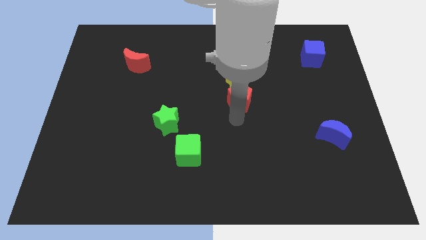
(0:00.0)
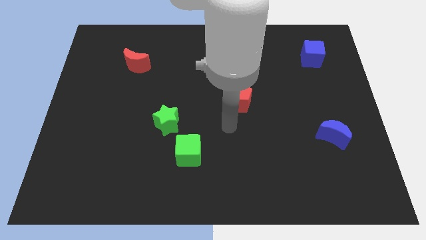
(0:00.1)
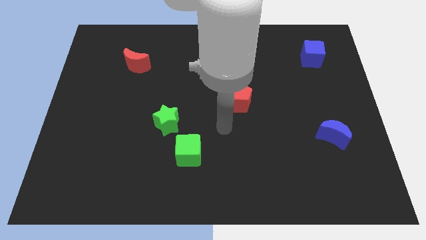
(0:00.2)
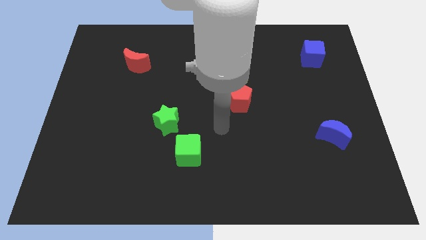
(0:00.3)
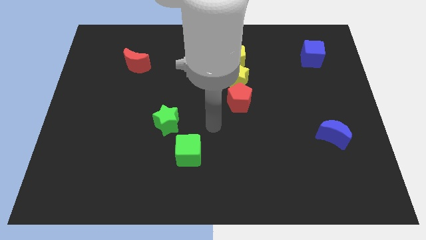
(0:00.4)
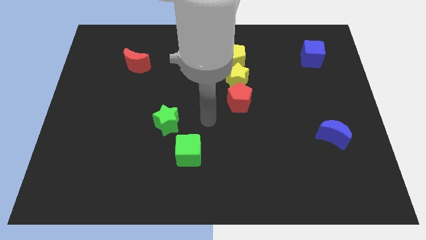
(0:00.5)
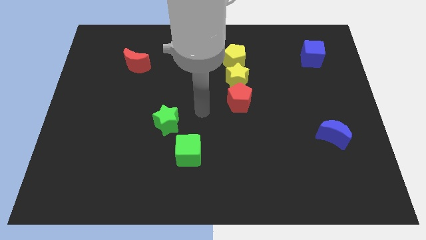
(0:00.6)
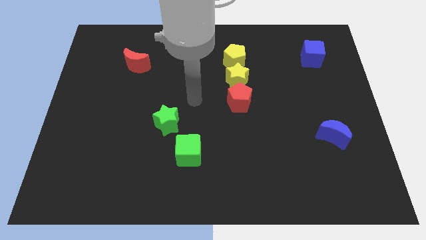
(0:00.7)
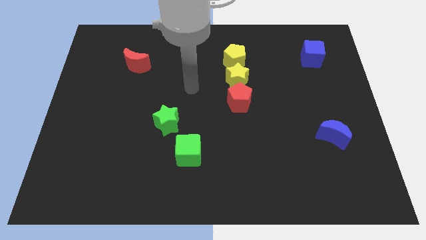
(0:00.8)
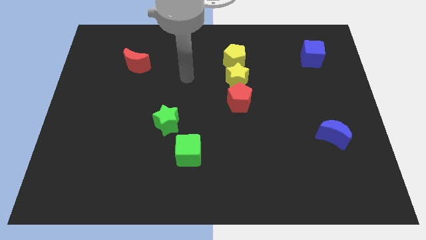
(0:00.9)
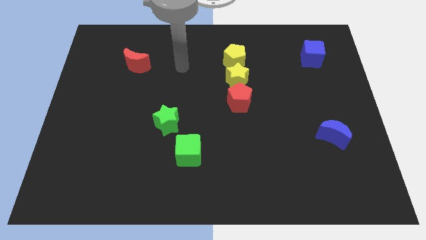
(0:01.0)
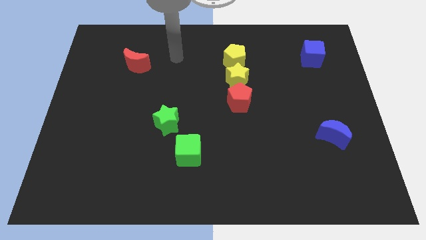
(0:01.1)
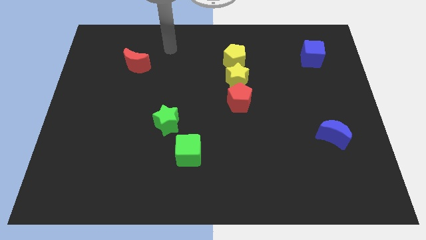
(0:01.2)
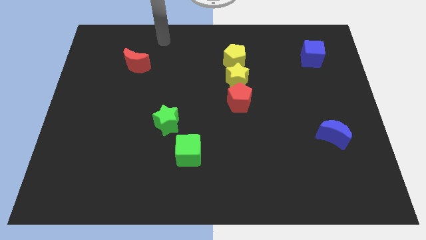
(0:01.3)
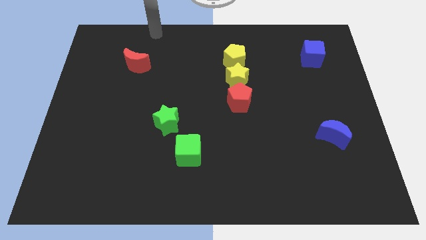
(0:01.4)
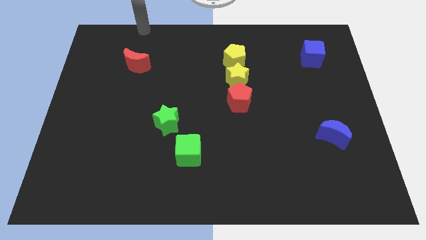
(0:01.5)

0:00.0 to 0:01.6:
move arm away from red pentagon

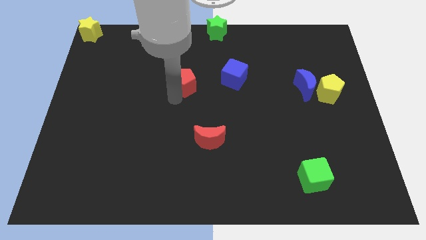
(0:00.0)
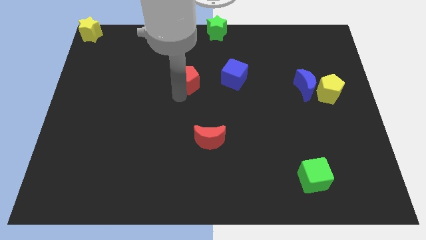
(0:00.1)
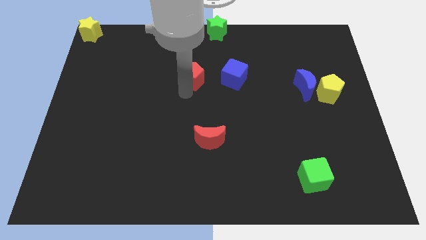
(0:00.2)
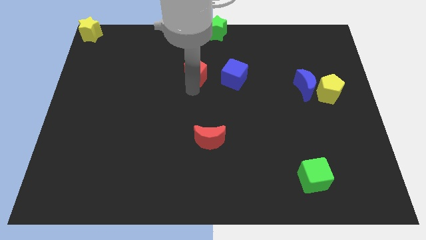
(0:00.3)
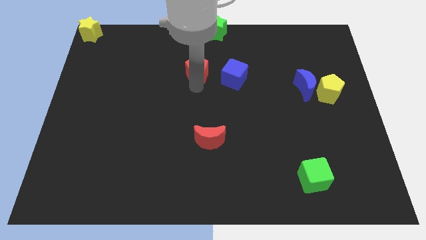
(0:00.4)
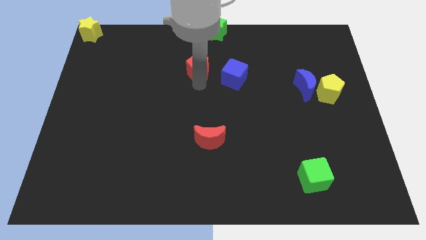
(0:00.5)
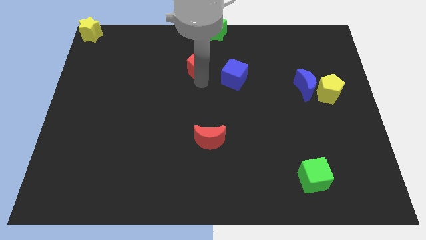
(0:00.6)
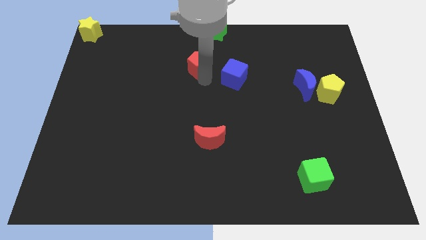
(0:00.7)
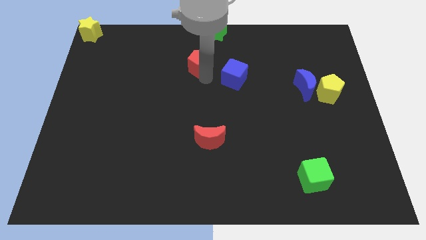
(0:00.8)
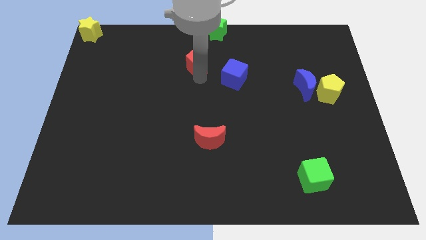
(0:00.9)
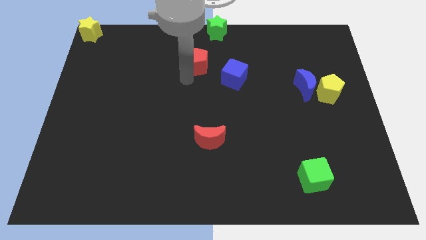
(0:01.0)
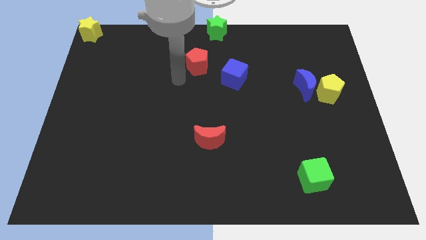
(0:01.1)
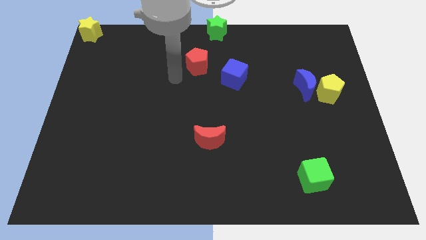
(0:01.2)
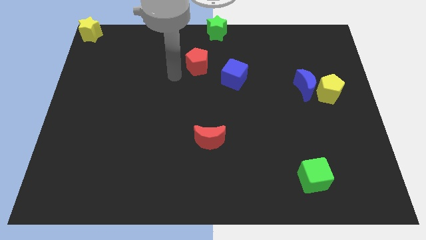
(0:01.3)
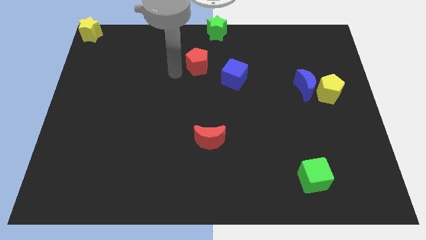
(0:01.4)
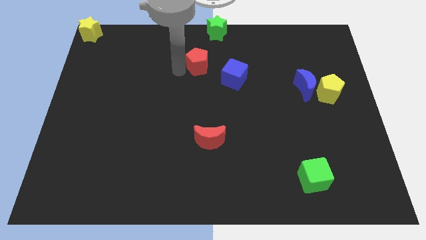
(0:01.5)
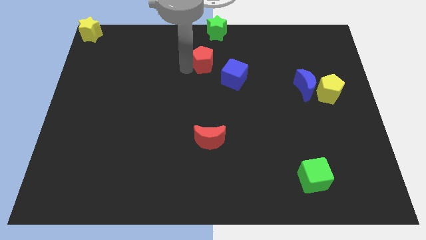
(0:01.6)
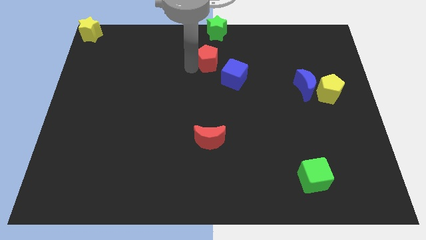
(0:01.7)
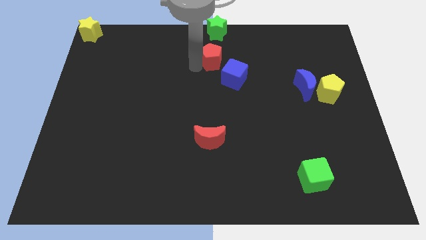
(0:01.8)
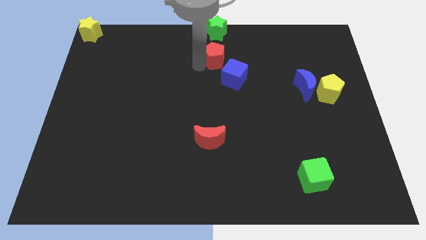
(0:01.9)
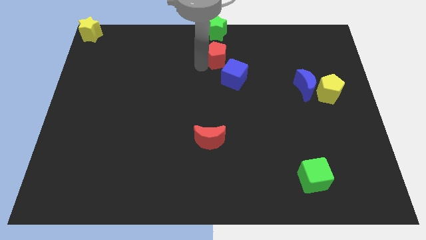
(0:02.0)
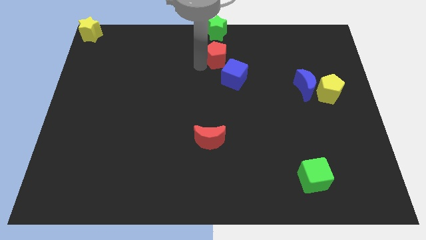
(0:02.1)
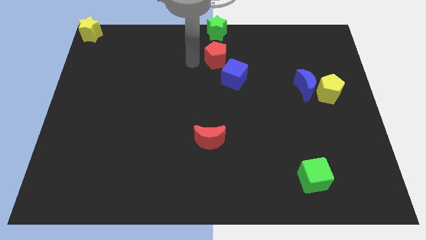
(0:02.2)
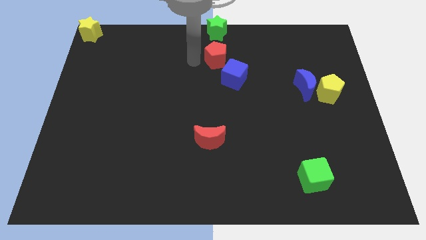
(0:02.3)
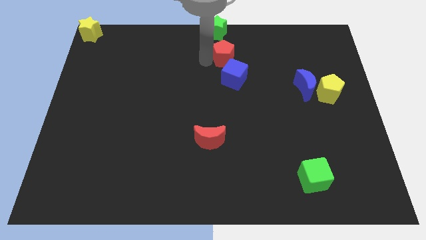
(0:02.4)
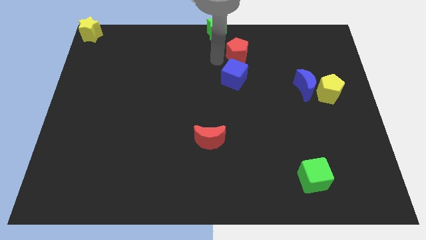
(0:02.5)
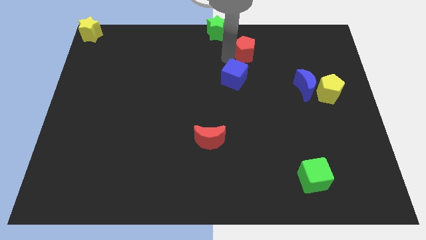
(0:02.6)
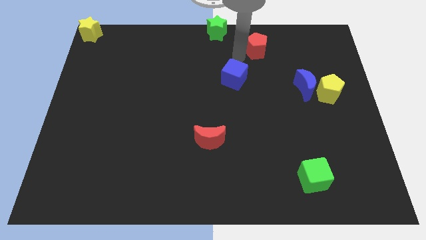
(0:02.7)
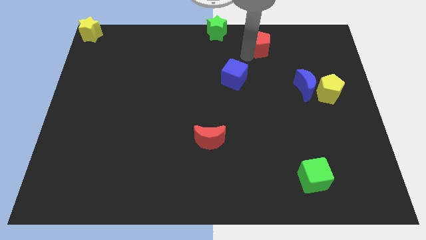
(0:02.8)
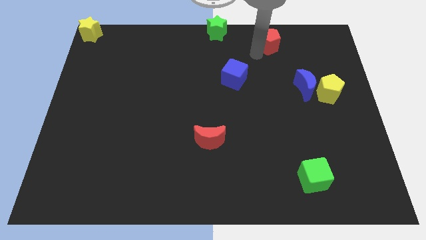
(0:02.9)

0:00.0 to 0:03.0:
move red pentagon towards the right side of the board

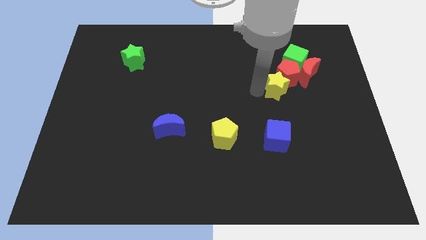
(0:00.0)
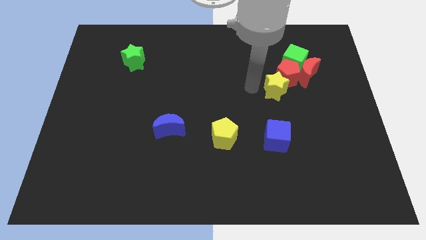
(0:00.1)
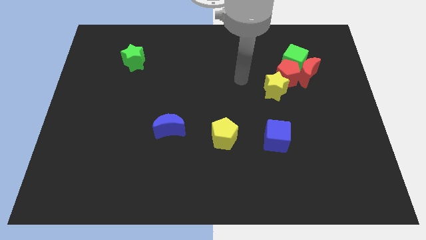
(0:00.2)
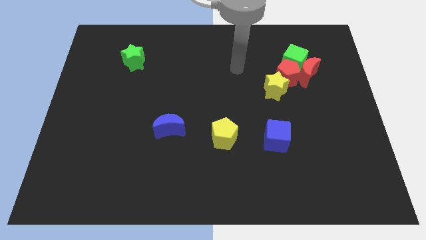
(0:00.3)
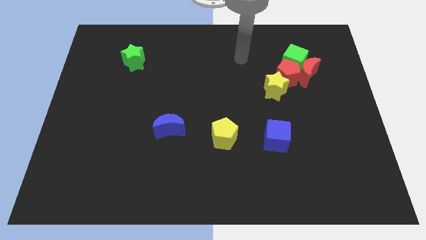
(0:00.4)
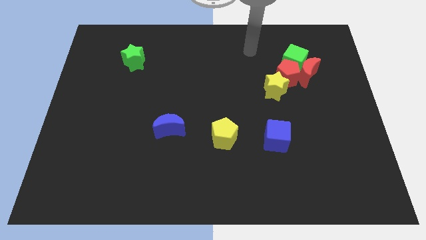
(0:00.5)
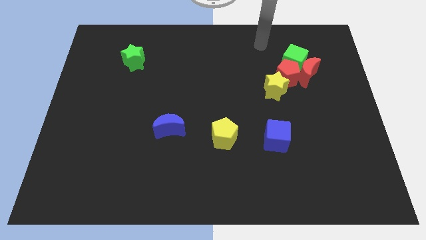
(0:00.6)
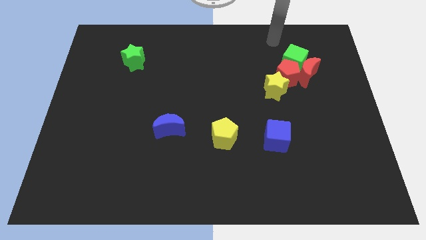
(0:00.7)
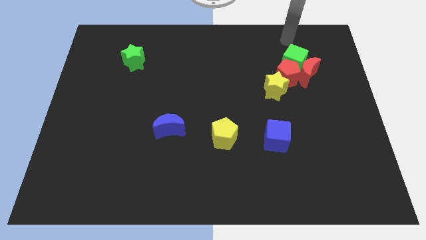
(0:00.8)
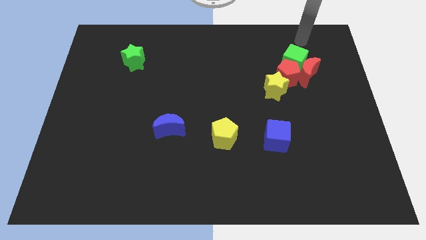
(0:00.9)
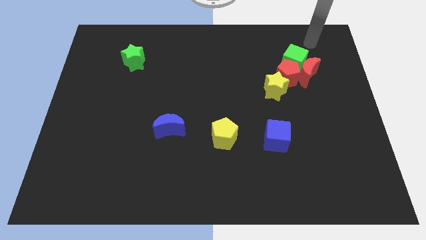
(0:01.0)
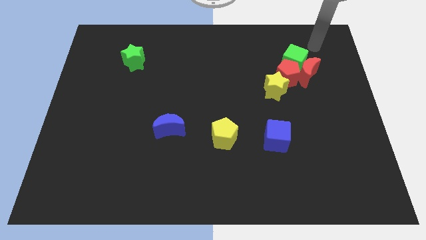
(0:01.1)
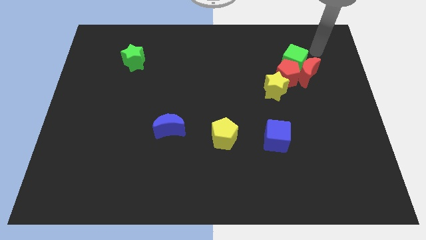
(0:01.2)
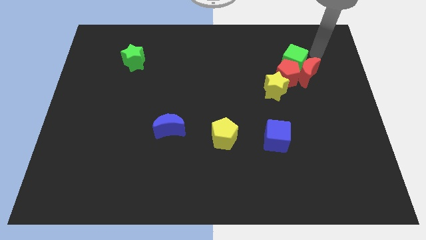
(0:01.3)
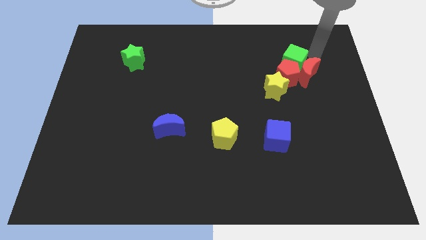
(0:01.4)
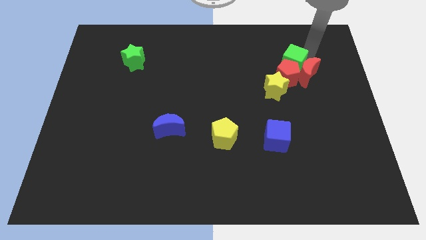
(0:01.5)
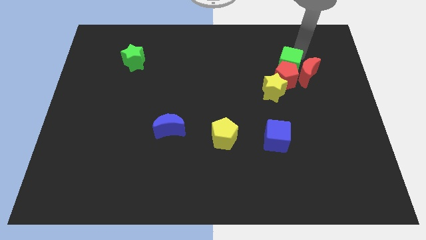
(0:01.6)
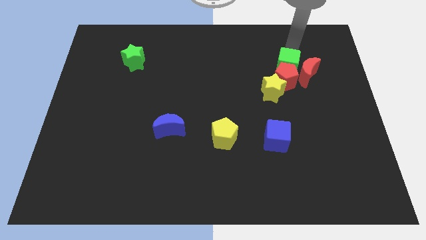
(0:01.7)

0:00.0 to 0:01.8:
touch the top side of the green cube

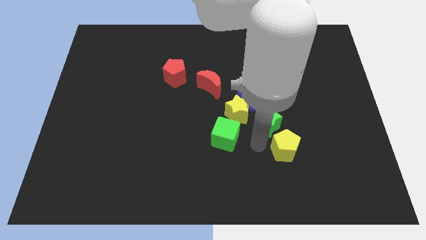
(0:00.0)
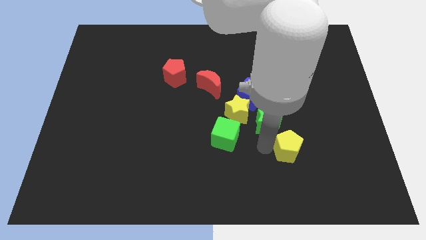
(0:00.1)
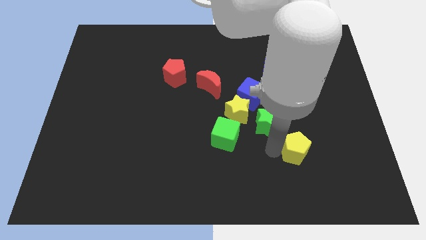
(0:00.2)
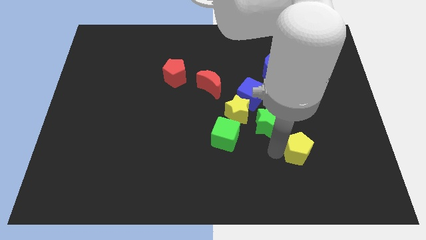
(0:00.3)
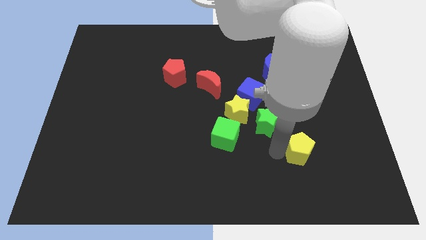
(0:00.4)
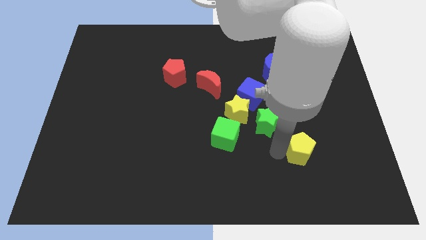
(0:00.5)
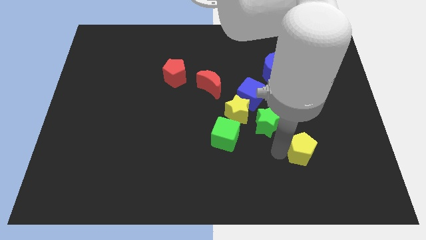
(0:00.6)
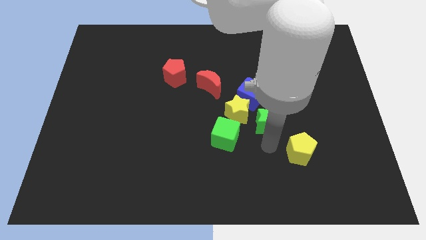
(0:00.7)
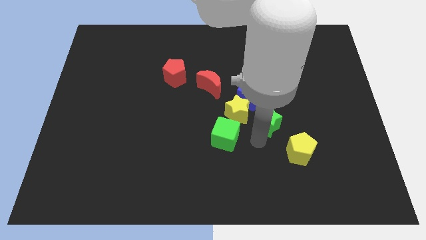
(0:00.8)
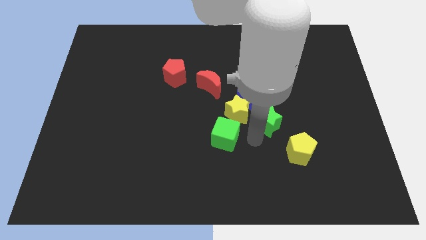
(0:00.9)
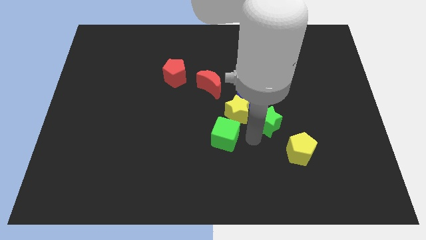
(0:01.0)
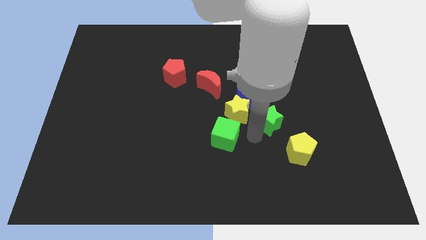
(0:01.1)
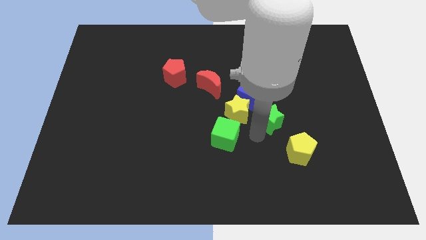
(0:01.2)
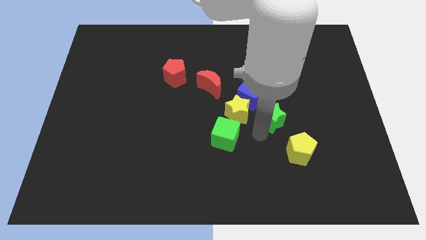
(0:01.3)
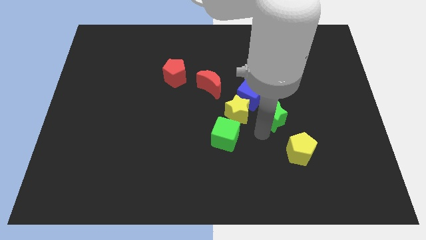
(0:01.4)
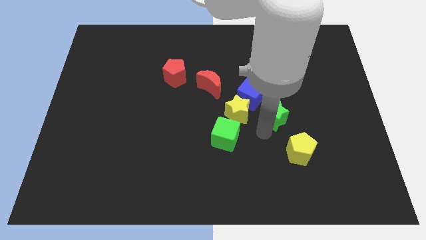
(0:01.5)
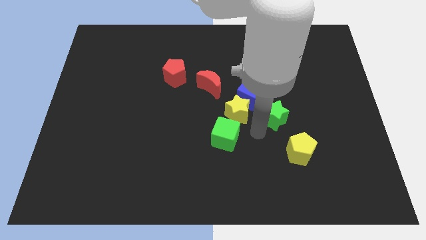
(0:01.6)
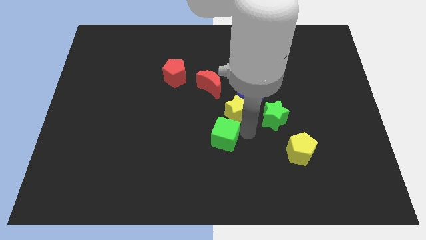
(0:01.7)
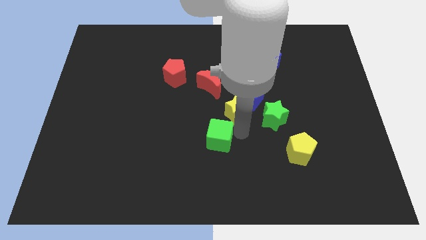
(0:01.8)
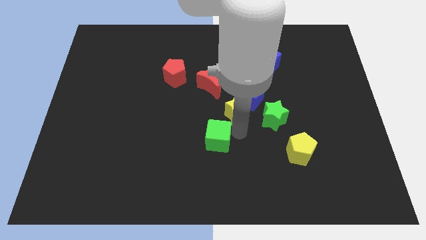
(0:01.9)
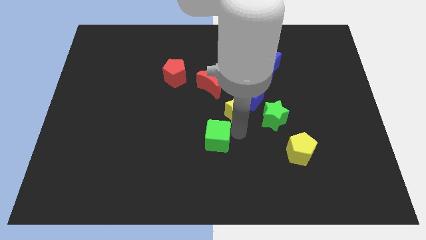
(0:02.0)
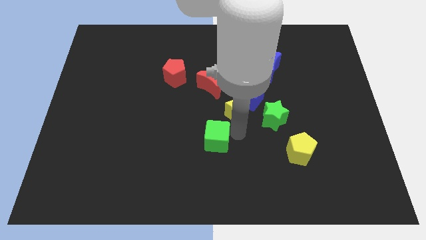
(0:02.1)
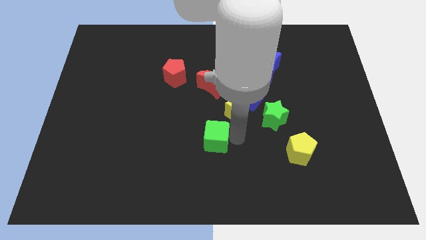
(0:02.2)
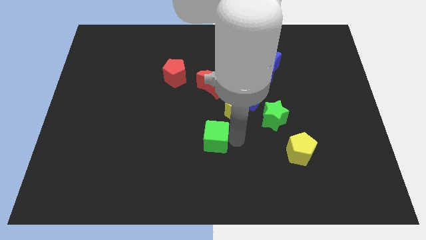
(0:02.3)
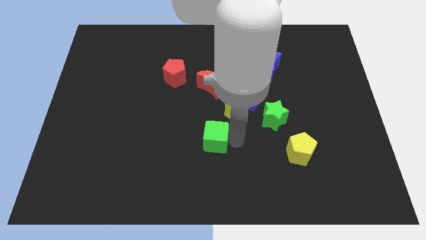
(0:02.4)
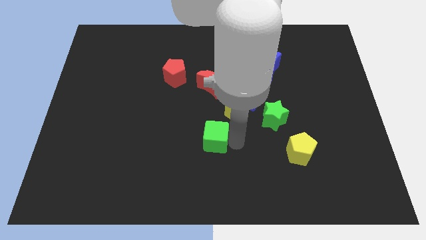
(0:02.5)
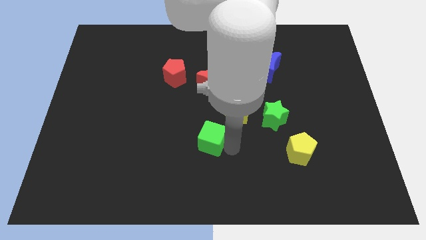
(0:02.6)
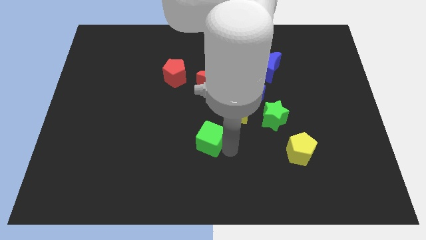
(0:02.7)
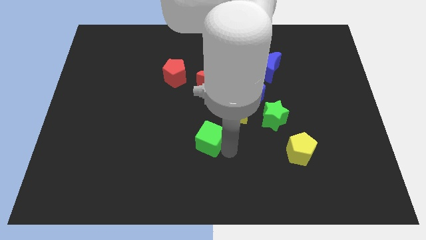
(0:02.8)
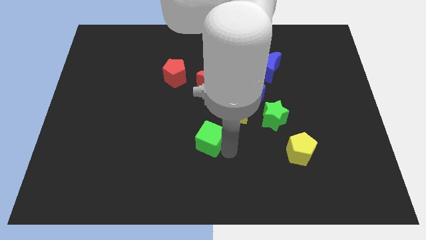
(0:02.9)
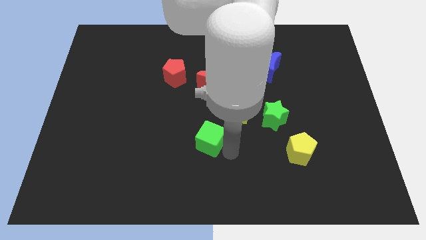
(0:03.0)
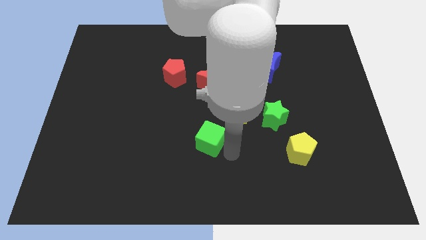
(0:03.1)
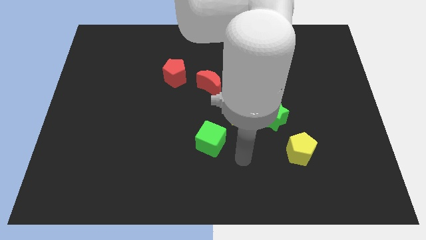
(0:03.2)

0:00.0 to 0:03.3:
push the green star slightly upwards
